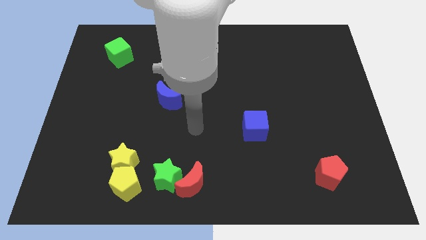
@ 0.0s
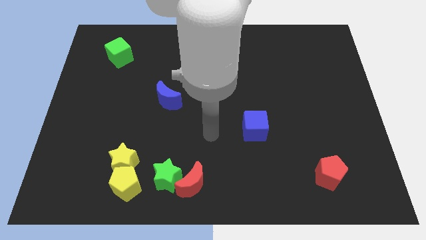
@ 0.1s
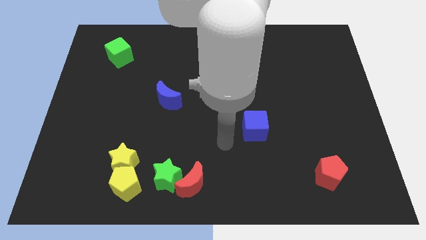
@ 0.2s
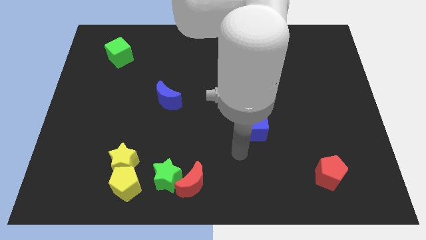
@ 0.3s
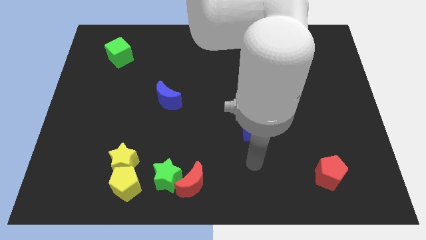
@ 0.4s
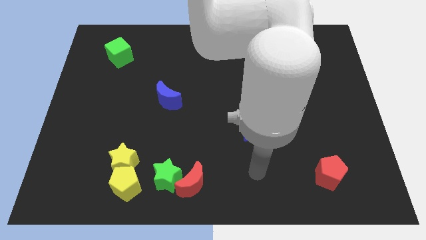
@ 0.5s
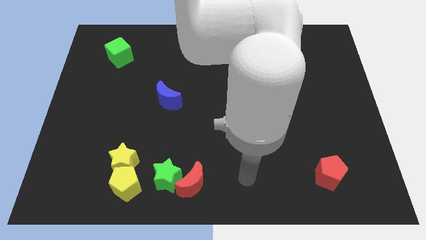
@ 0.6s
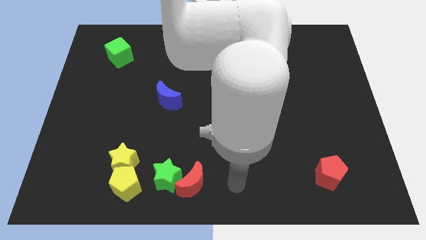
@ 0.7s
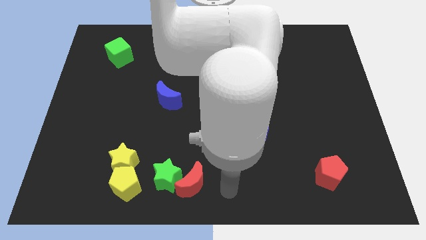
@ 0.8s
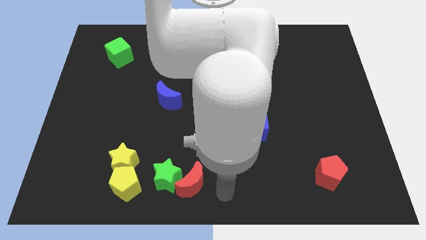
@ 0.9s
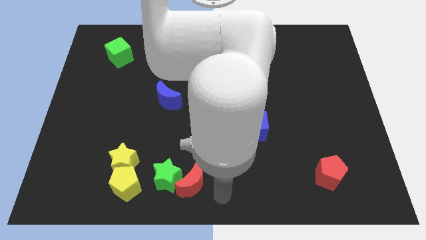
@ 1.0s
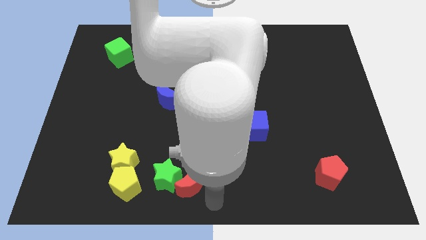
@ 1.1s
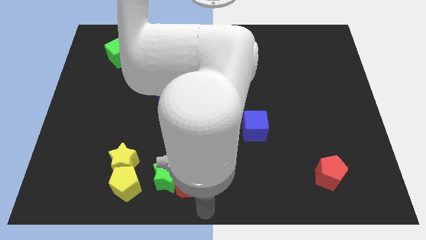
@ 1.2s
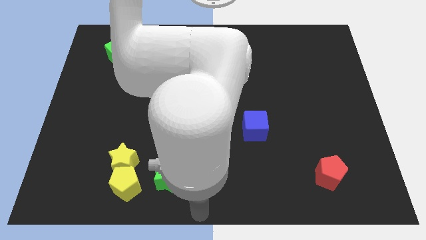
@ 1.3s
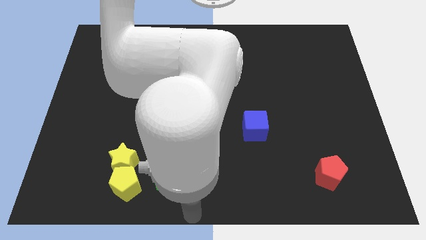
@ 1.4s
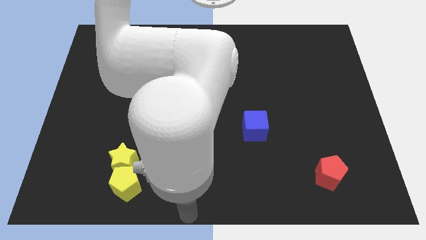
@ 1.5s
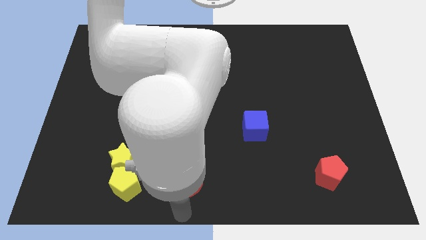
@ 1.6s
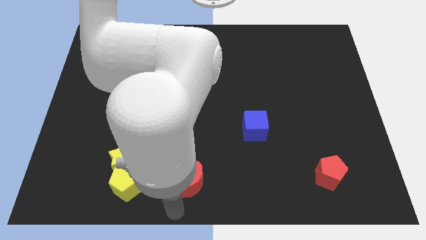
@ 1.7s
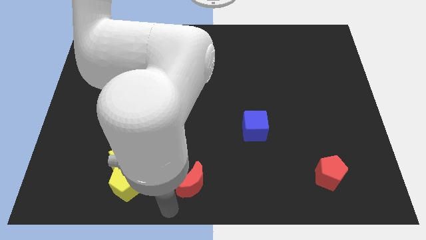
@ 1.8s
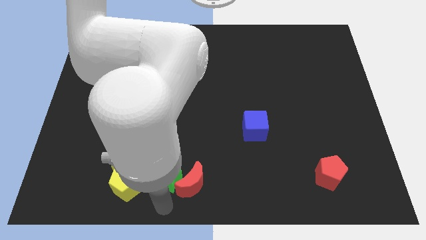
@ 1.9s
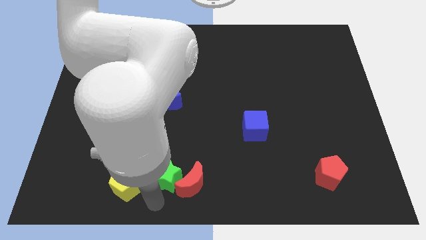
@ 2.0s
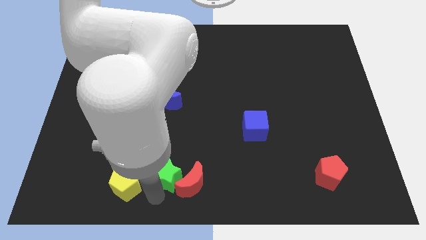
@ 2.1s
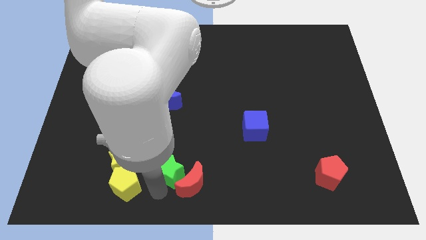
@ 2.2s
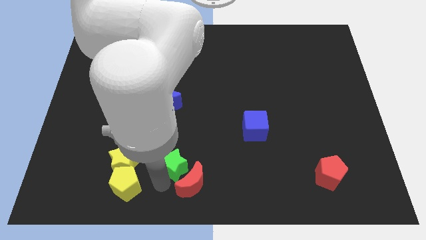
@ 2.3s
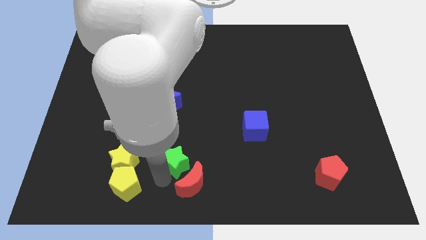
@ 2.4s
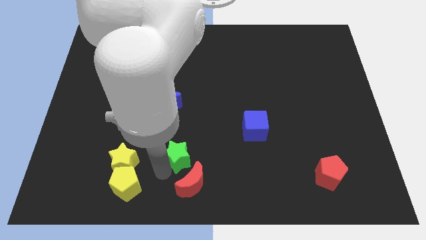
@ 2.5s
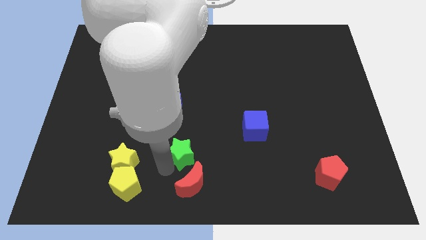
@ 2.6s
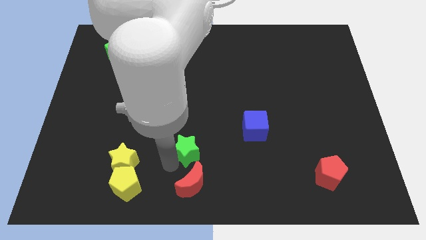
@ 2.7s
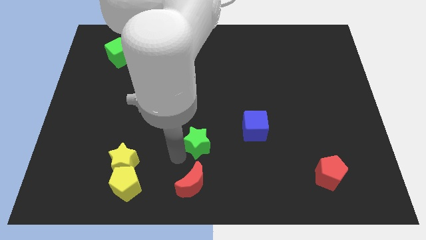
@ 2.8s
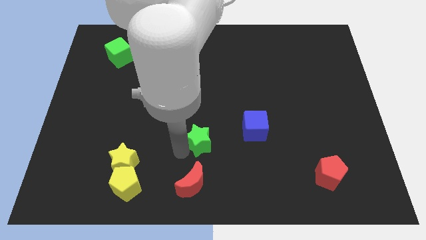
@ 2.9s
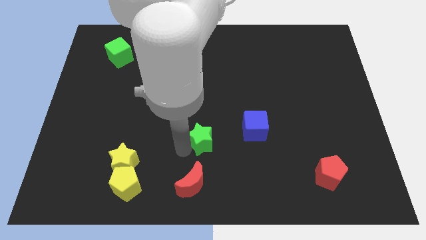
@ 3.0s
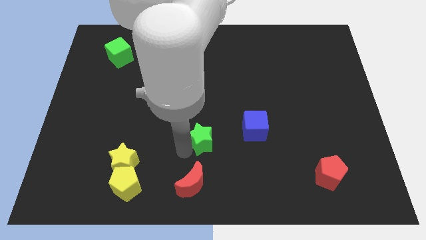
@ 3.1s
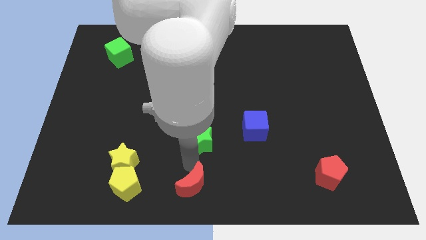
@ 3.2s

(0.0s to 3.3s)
place the green star left to the blue cube

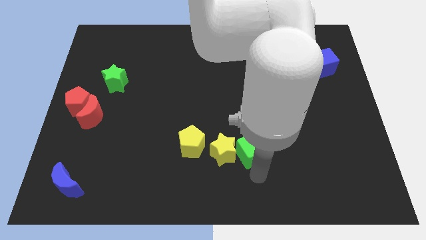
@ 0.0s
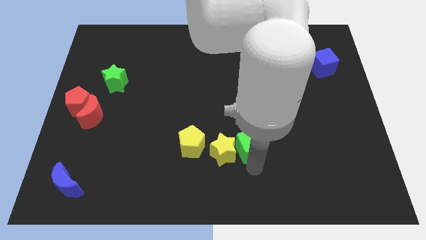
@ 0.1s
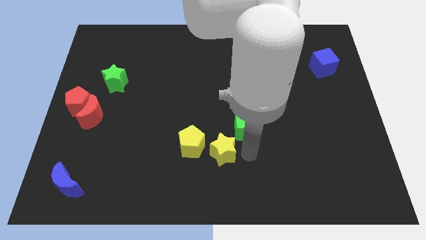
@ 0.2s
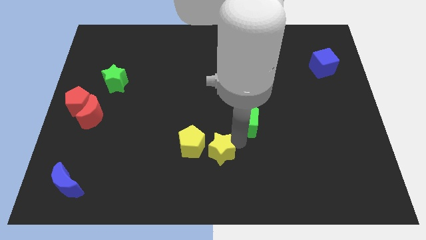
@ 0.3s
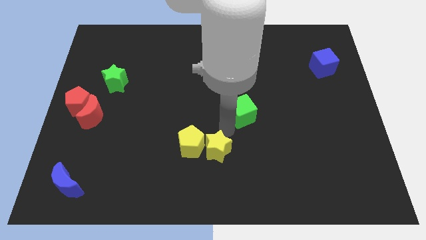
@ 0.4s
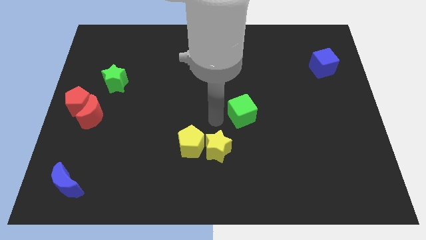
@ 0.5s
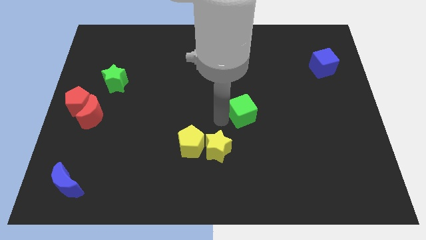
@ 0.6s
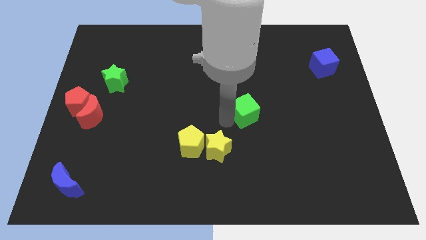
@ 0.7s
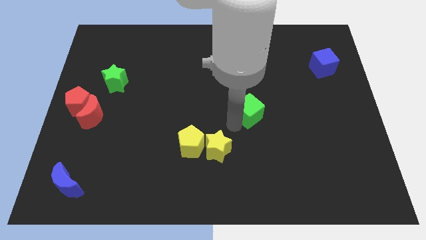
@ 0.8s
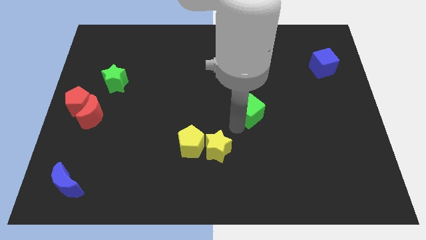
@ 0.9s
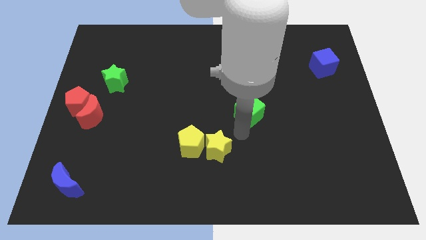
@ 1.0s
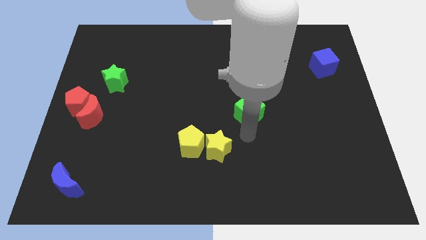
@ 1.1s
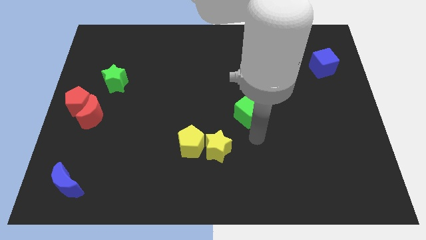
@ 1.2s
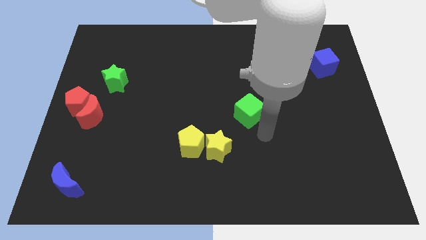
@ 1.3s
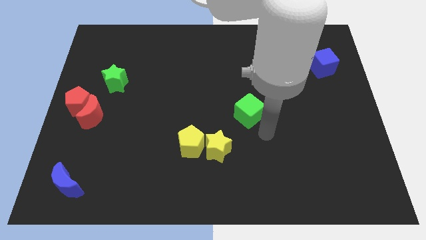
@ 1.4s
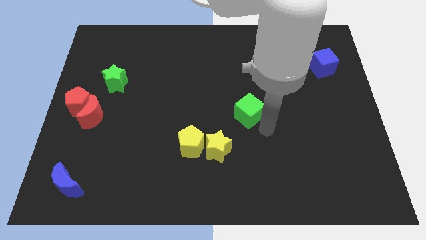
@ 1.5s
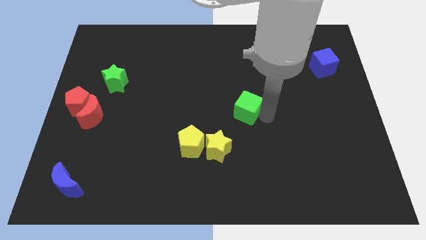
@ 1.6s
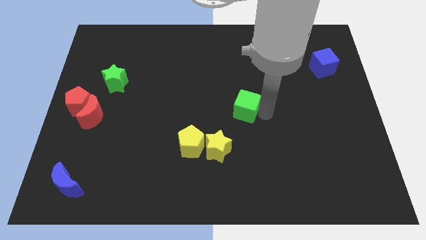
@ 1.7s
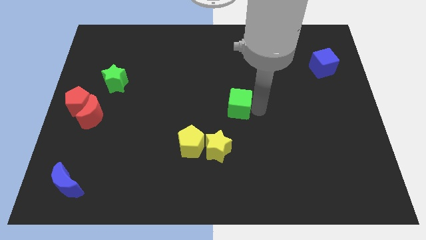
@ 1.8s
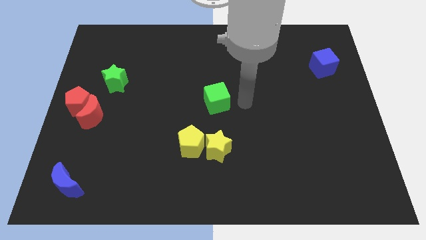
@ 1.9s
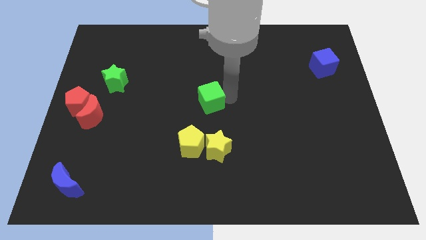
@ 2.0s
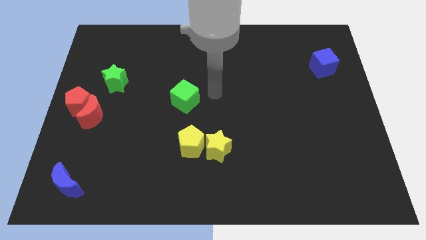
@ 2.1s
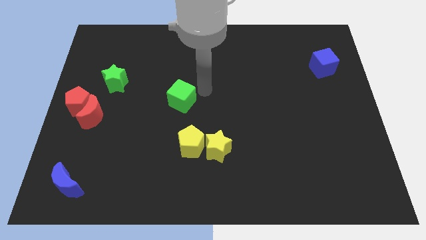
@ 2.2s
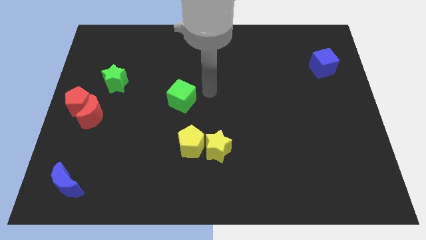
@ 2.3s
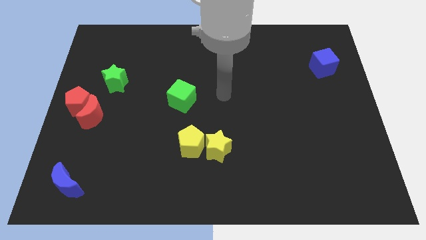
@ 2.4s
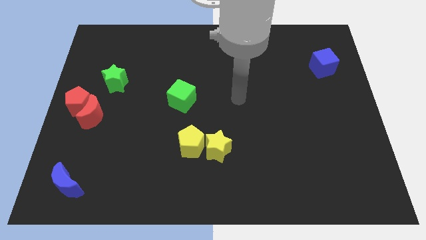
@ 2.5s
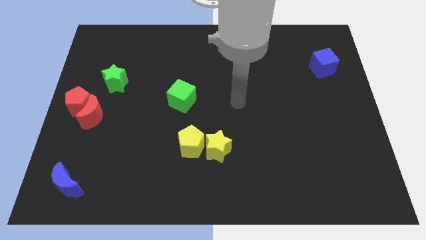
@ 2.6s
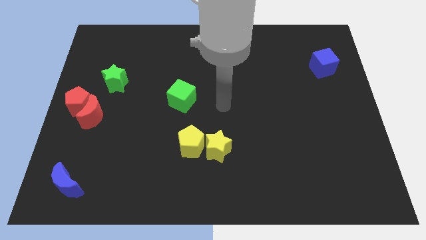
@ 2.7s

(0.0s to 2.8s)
place the green at the top of yellow pentagon

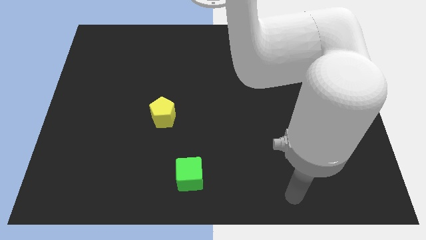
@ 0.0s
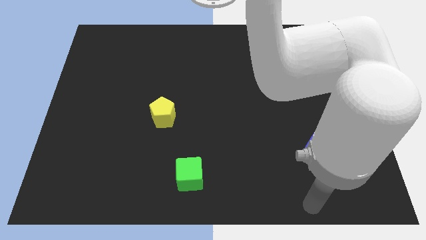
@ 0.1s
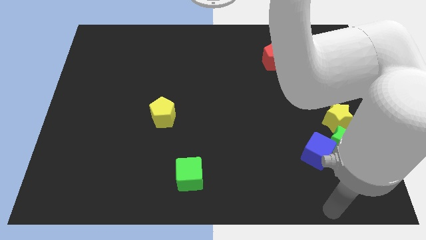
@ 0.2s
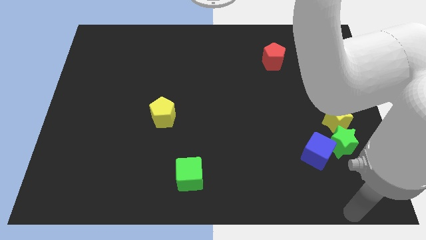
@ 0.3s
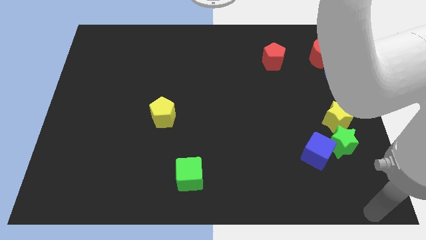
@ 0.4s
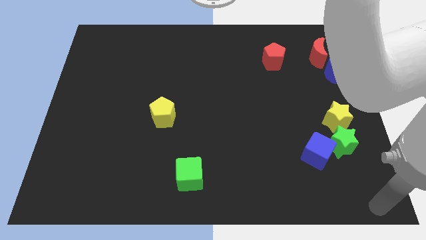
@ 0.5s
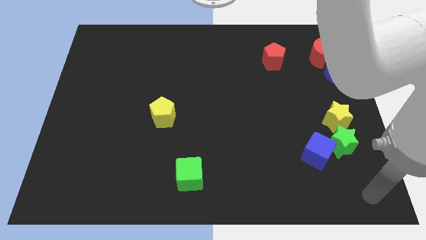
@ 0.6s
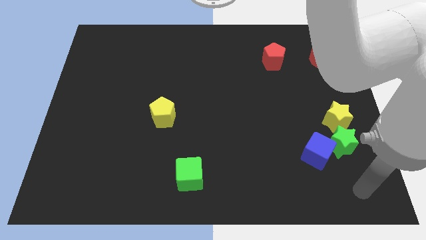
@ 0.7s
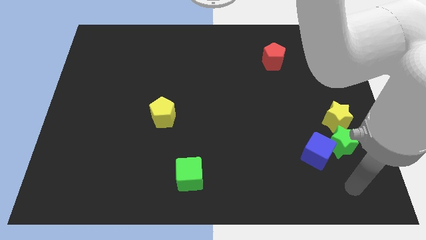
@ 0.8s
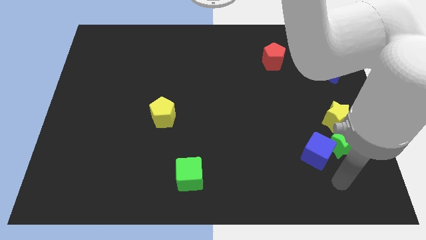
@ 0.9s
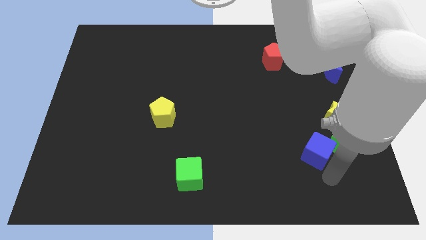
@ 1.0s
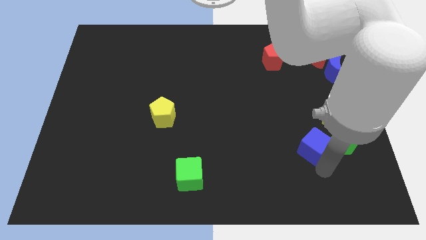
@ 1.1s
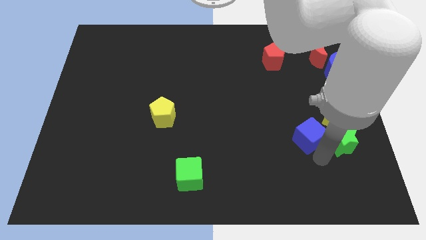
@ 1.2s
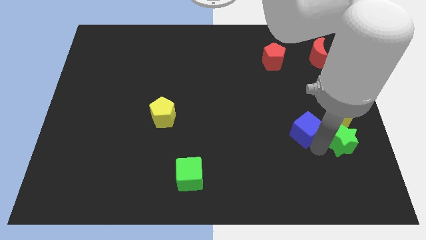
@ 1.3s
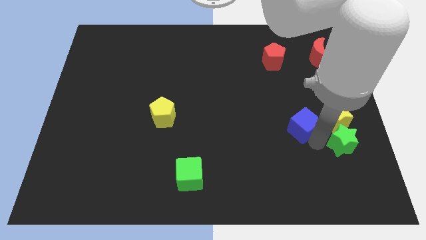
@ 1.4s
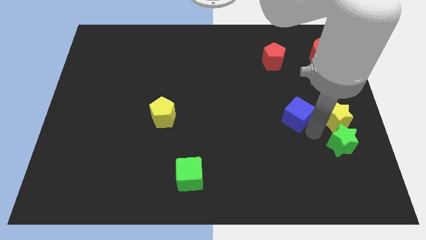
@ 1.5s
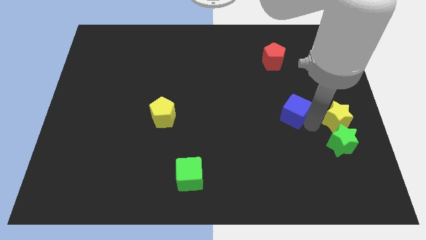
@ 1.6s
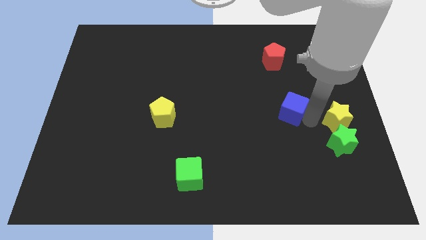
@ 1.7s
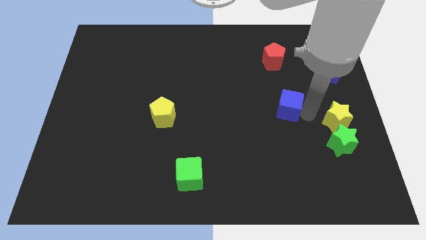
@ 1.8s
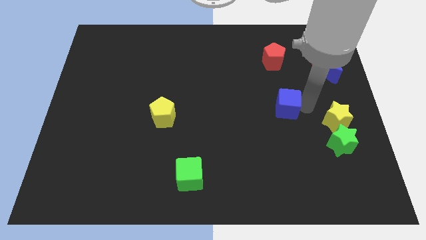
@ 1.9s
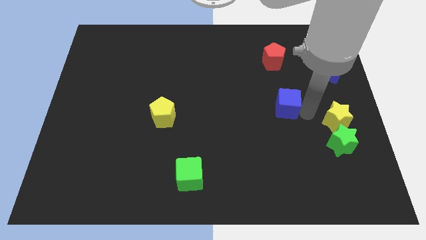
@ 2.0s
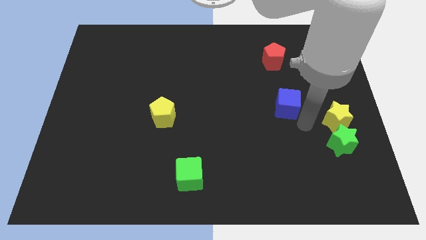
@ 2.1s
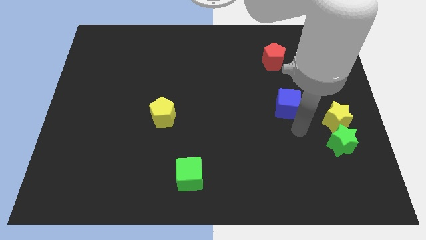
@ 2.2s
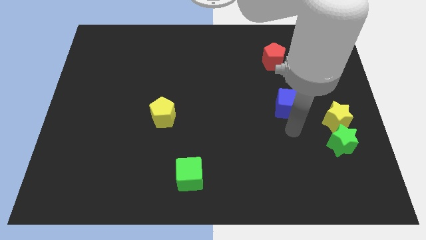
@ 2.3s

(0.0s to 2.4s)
push blue cube towards red pentagon

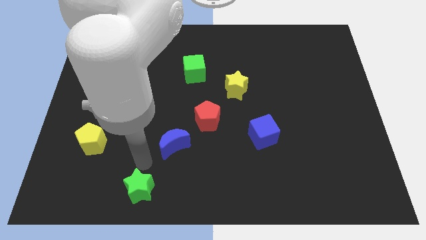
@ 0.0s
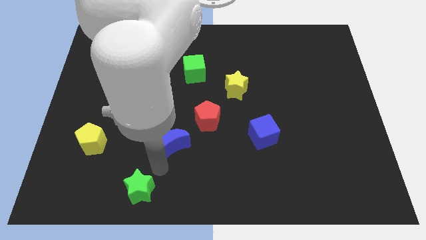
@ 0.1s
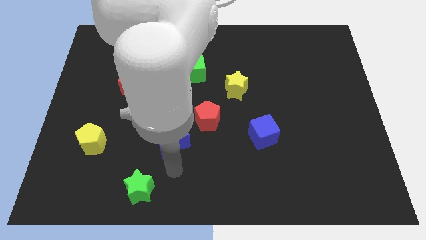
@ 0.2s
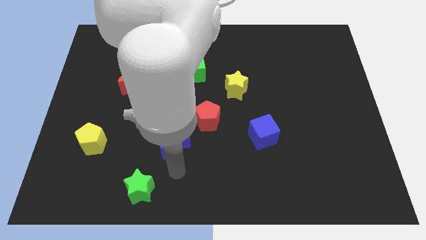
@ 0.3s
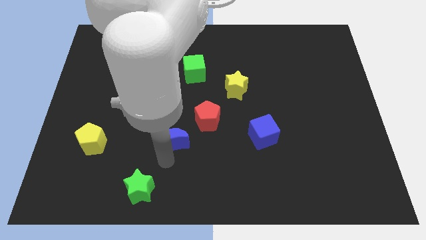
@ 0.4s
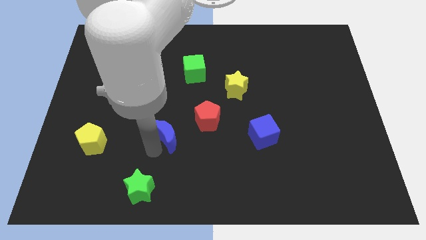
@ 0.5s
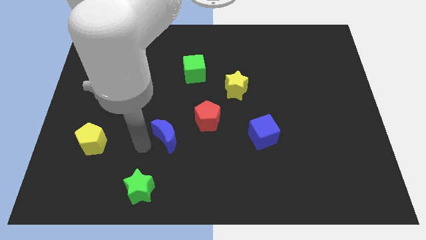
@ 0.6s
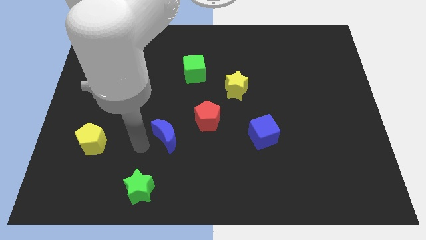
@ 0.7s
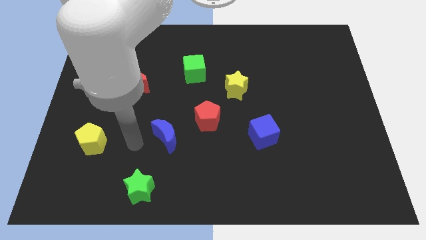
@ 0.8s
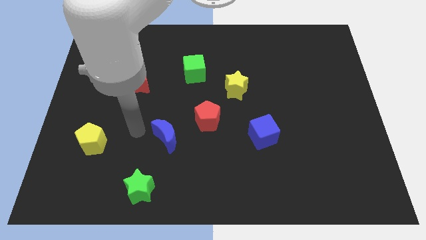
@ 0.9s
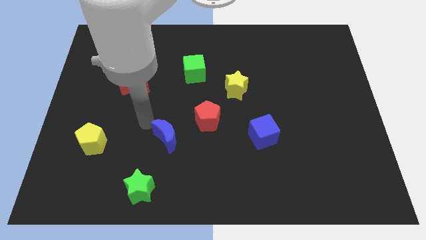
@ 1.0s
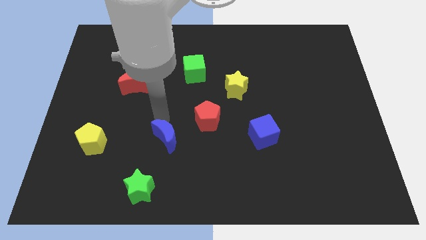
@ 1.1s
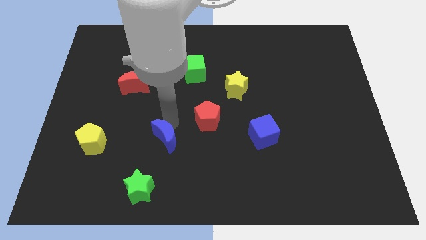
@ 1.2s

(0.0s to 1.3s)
push the blue moon slightly upwards
